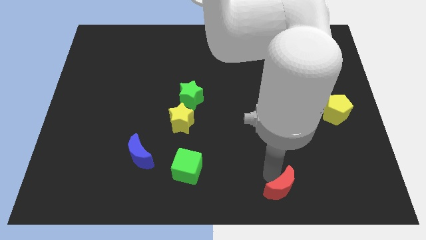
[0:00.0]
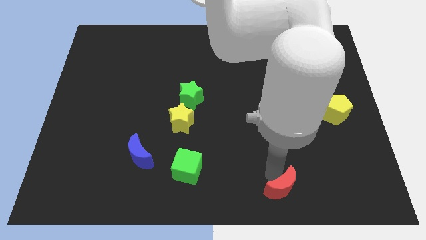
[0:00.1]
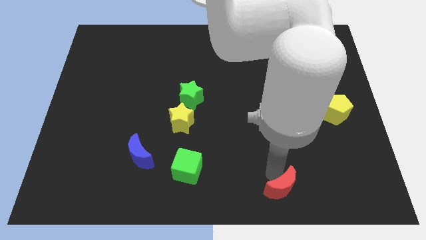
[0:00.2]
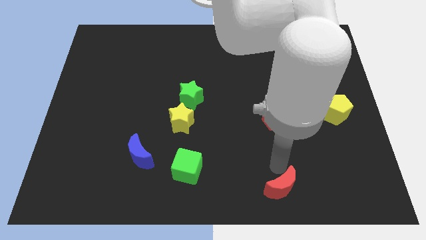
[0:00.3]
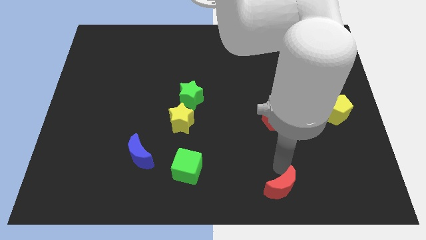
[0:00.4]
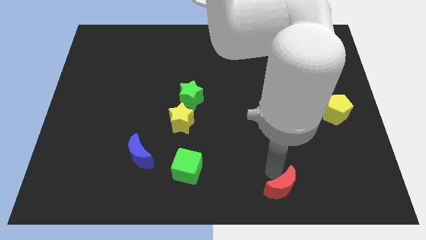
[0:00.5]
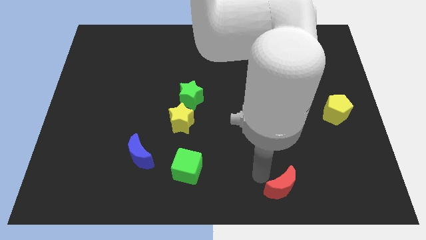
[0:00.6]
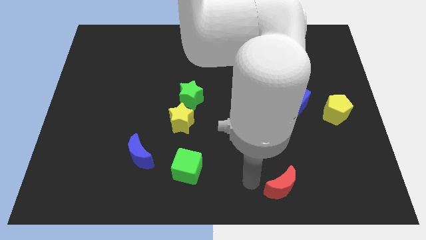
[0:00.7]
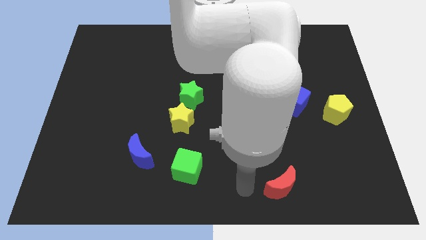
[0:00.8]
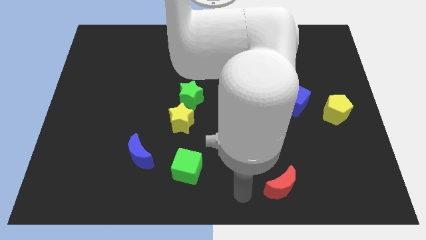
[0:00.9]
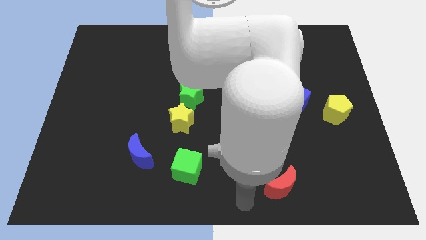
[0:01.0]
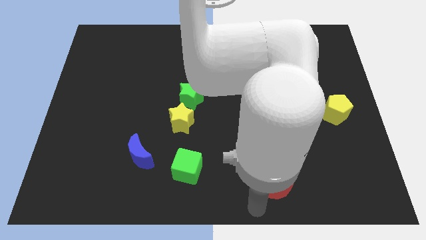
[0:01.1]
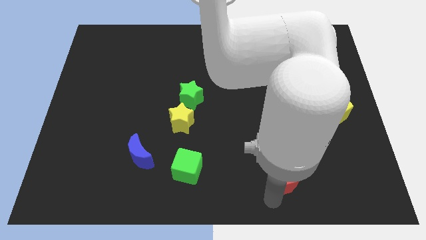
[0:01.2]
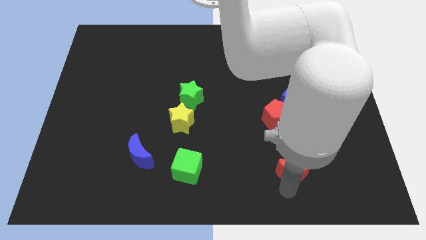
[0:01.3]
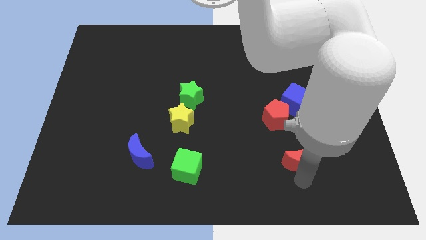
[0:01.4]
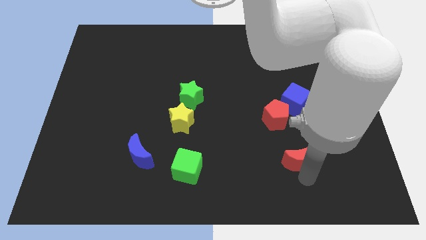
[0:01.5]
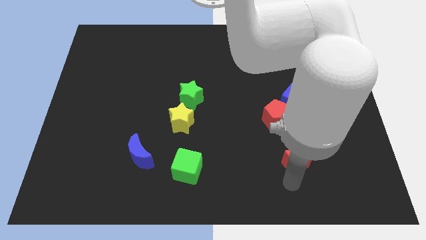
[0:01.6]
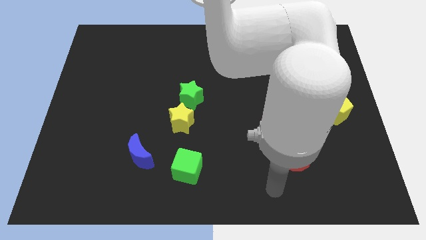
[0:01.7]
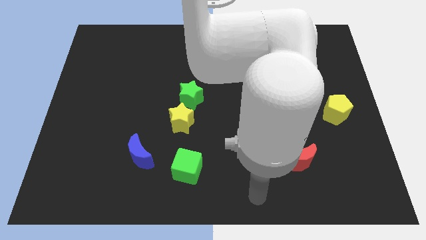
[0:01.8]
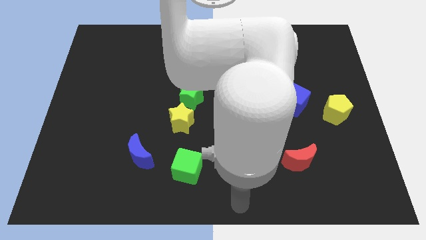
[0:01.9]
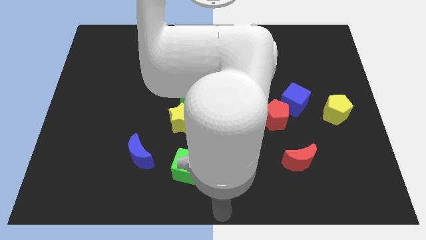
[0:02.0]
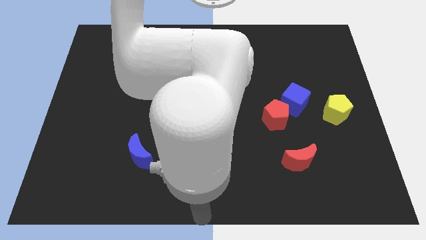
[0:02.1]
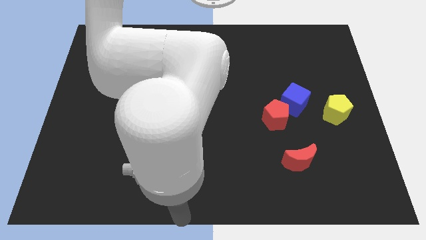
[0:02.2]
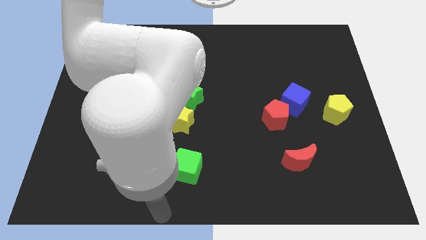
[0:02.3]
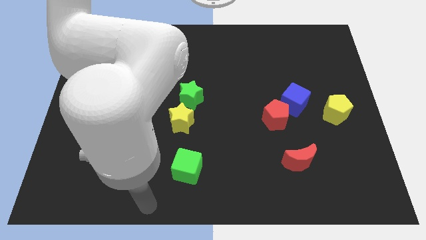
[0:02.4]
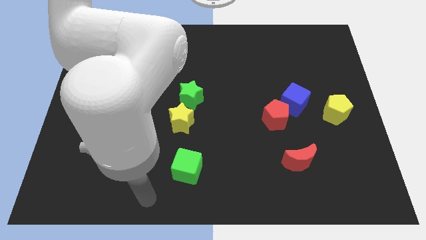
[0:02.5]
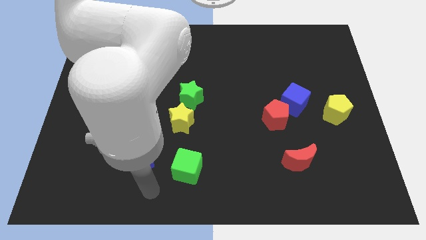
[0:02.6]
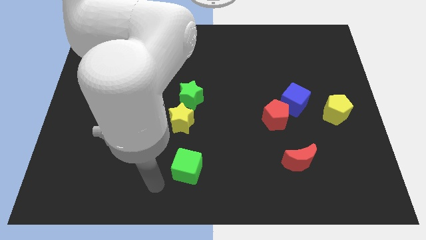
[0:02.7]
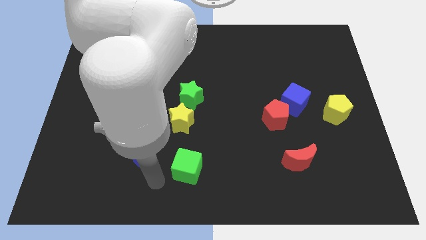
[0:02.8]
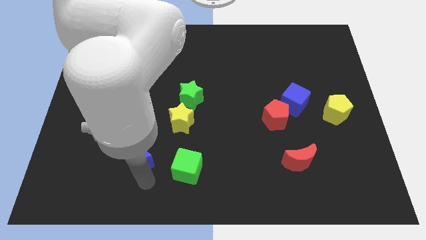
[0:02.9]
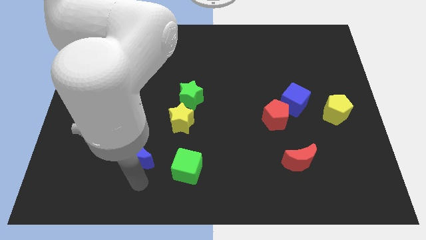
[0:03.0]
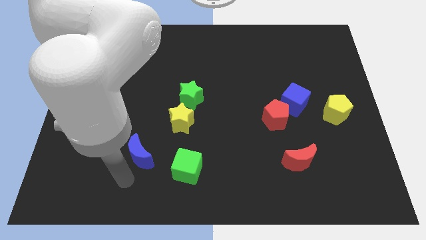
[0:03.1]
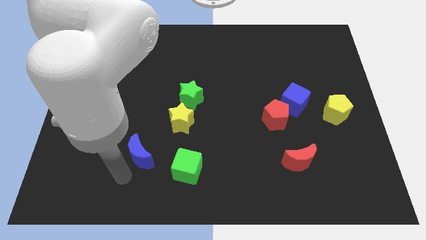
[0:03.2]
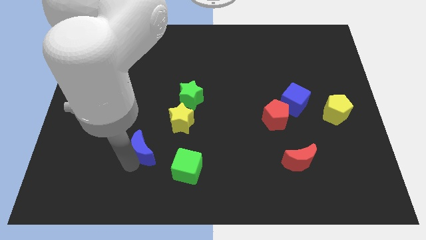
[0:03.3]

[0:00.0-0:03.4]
place the red crescent horizontally to the right side of the green cube

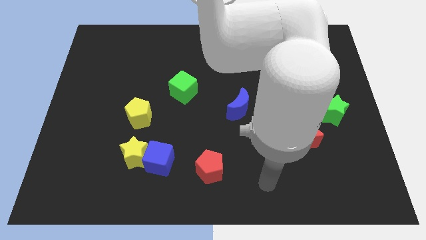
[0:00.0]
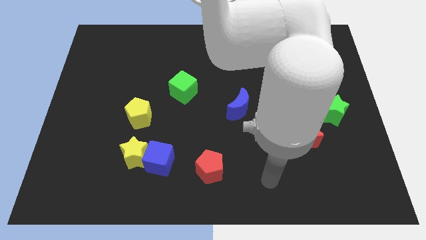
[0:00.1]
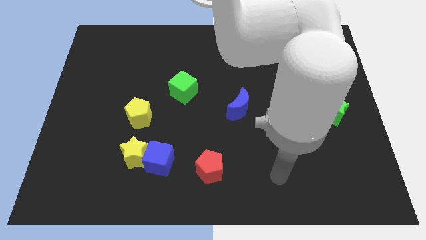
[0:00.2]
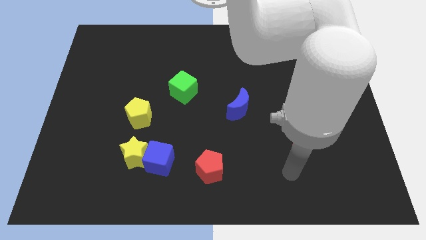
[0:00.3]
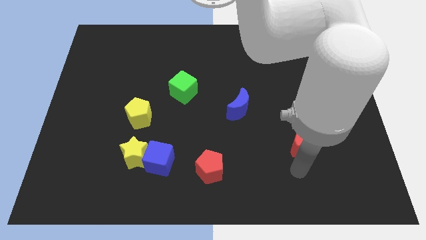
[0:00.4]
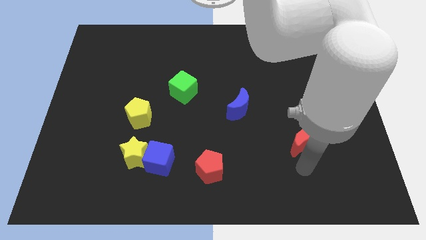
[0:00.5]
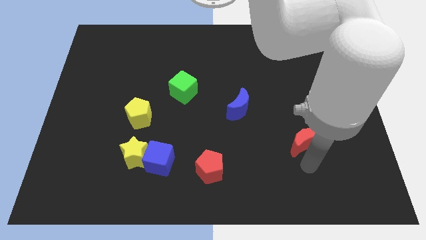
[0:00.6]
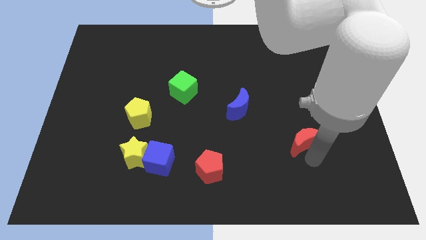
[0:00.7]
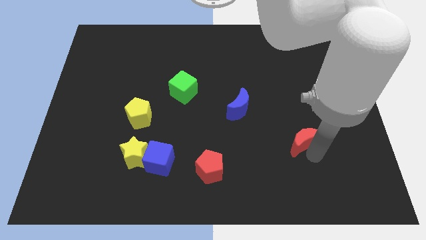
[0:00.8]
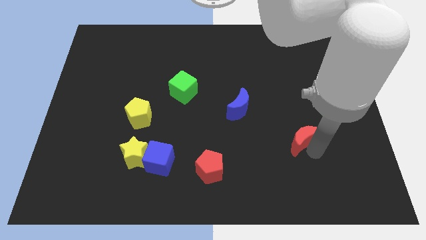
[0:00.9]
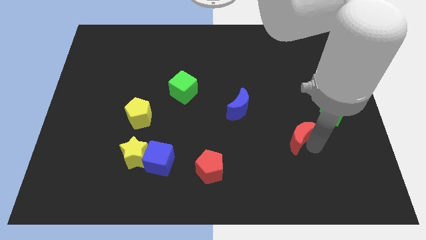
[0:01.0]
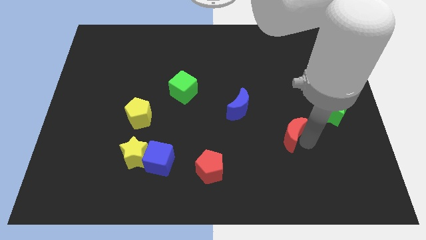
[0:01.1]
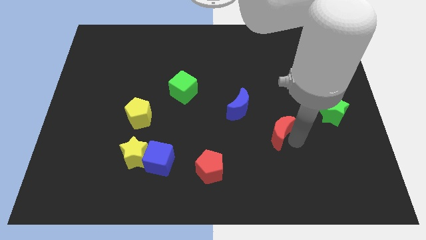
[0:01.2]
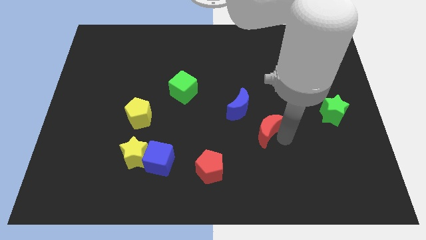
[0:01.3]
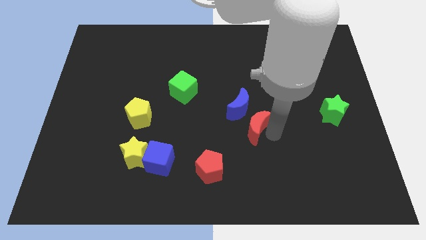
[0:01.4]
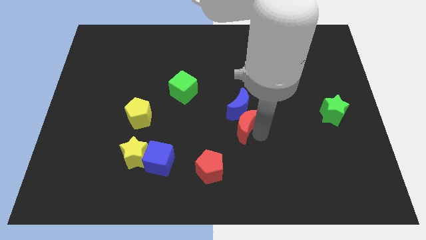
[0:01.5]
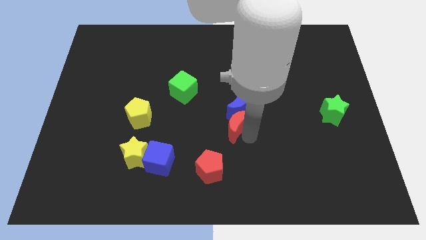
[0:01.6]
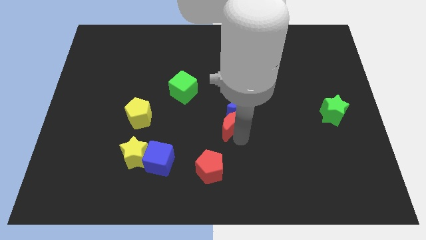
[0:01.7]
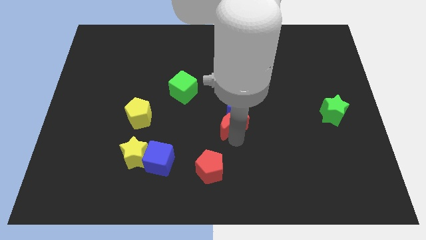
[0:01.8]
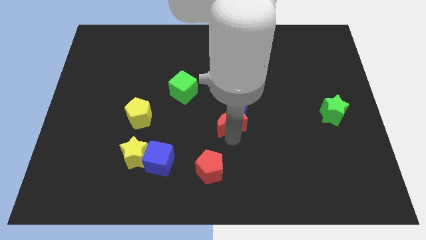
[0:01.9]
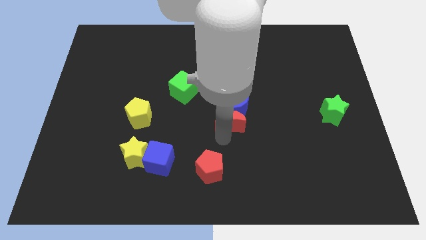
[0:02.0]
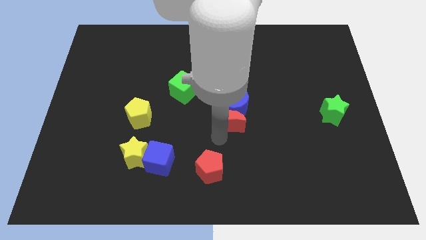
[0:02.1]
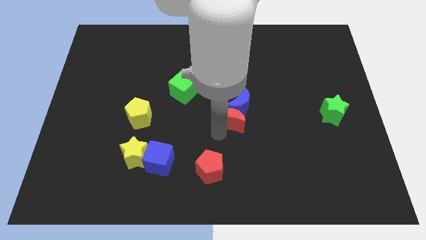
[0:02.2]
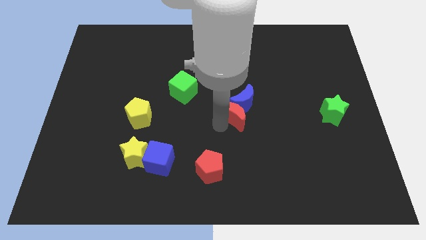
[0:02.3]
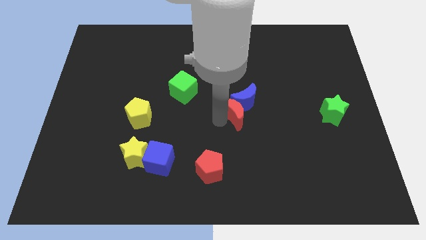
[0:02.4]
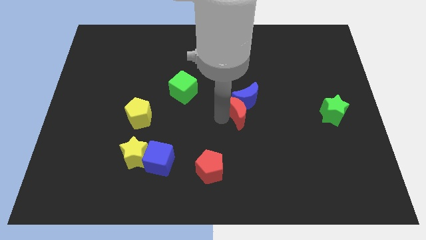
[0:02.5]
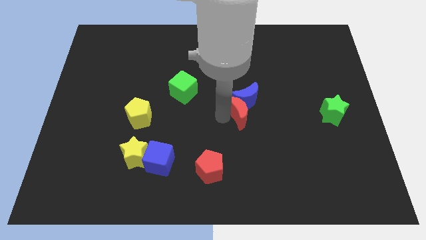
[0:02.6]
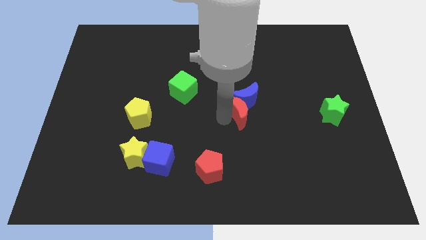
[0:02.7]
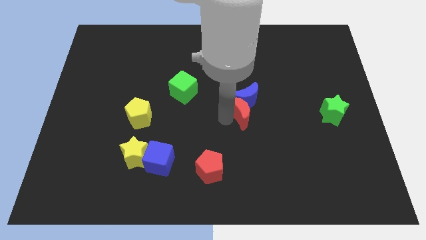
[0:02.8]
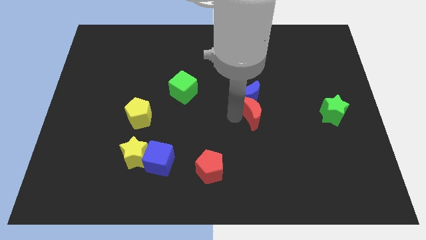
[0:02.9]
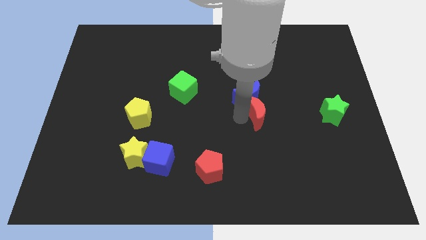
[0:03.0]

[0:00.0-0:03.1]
move the red crescent into the bottom side of the blue crescent

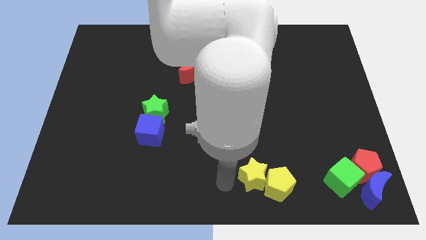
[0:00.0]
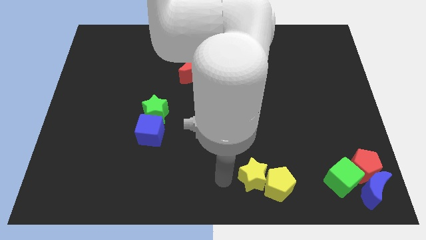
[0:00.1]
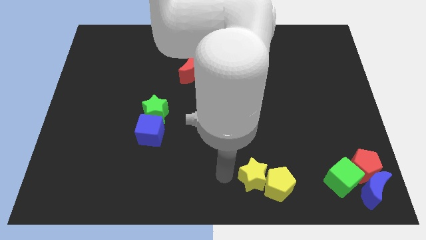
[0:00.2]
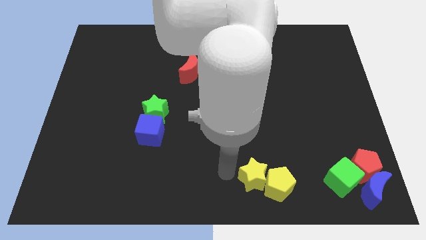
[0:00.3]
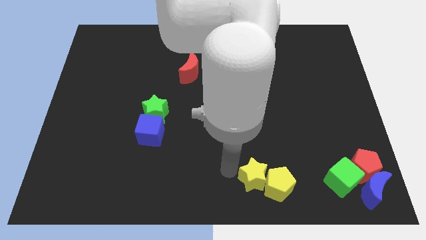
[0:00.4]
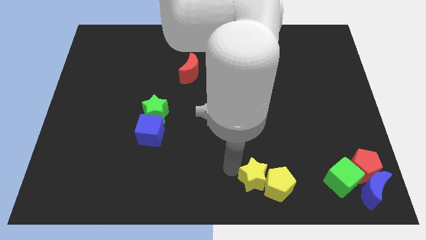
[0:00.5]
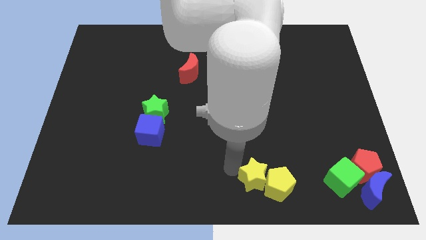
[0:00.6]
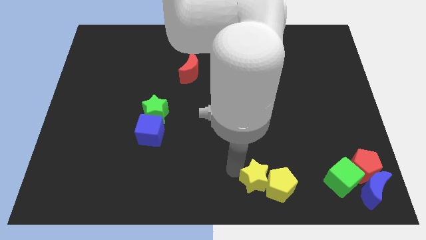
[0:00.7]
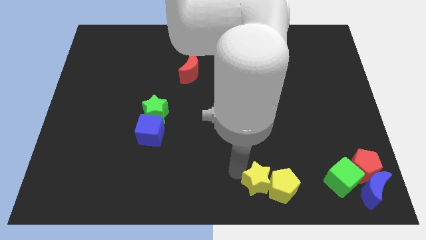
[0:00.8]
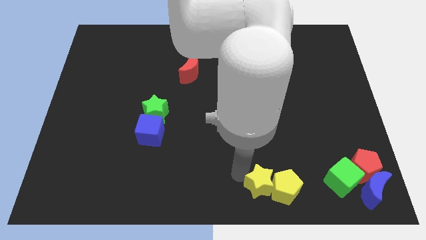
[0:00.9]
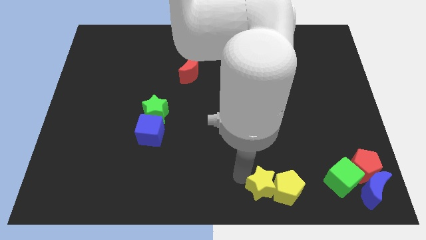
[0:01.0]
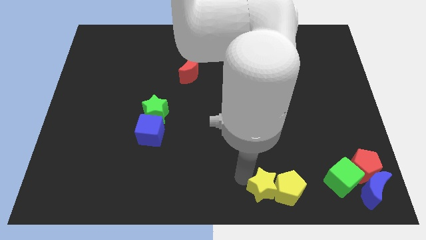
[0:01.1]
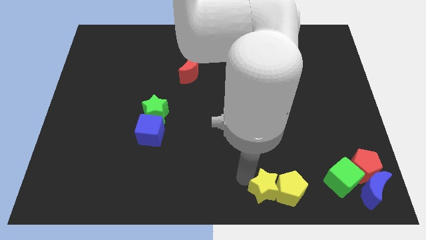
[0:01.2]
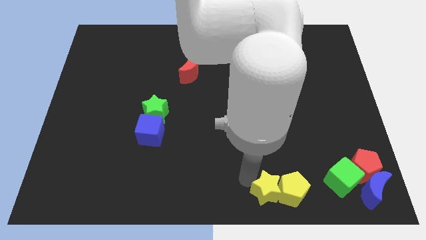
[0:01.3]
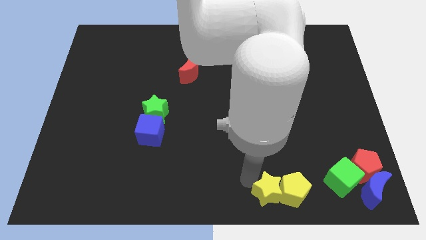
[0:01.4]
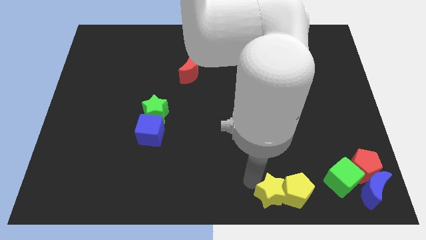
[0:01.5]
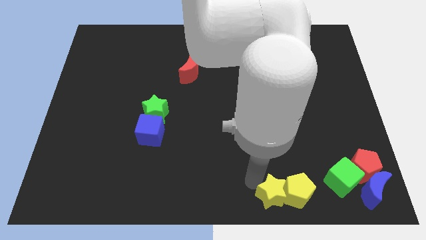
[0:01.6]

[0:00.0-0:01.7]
move yellow blocks slightly right

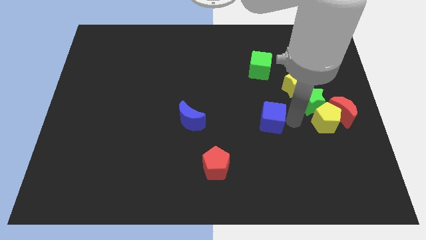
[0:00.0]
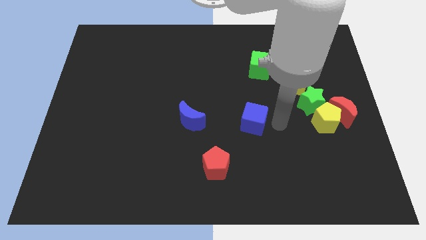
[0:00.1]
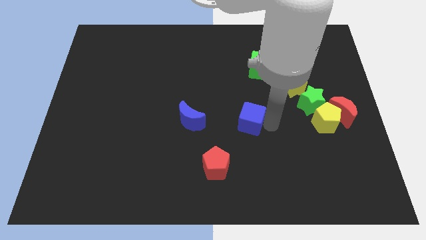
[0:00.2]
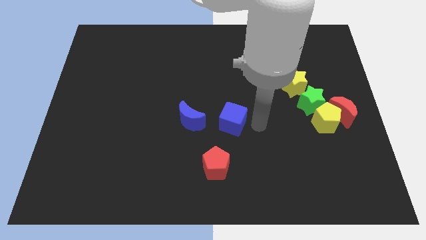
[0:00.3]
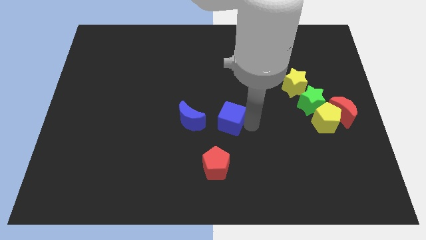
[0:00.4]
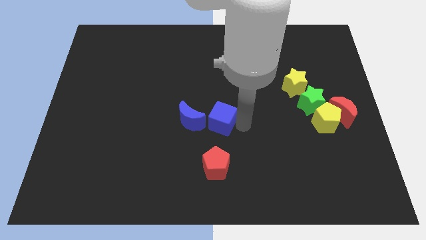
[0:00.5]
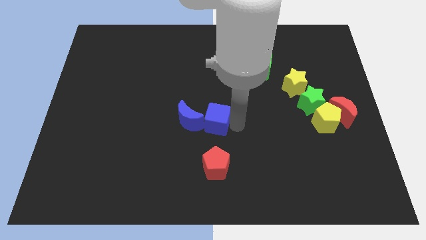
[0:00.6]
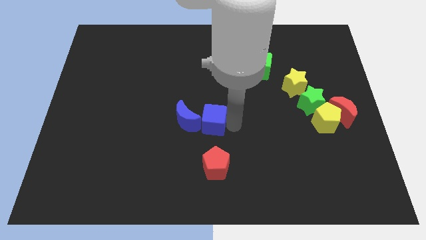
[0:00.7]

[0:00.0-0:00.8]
push the blue cube to the right of the blue crescent

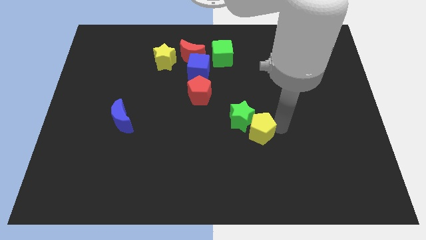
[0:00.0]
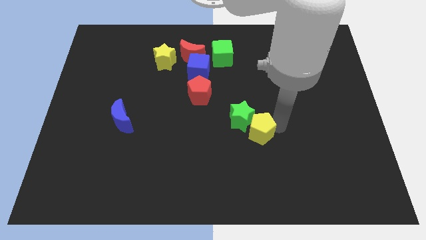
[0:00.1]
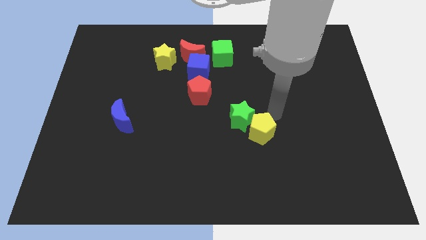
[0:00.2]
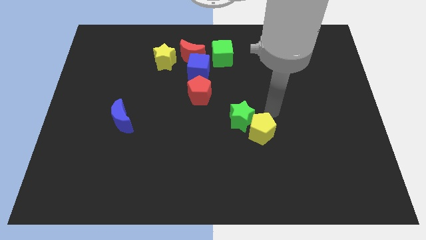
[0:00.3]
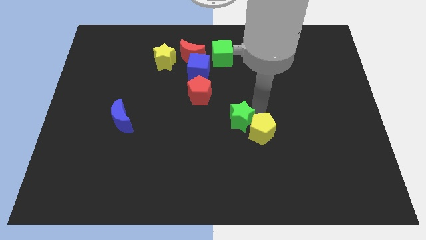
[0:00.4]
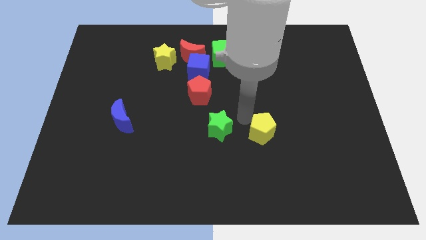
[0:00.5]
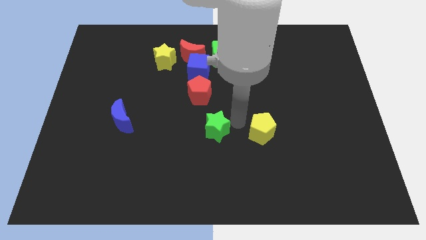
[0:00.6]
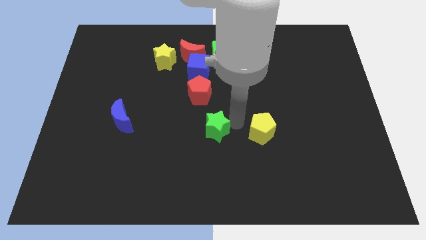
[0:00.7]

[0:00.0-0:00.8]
seperate the green star away from the yellow pentagon
